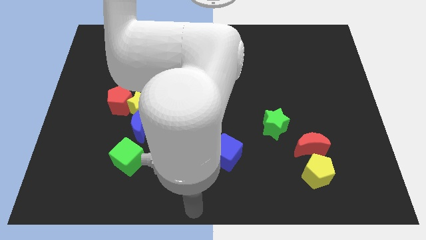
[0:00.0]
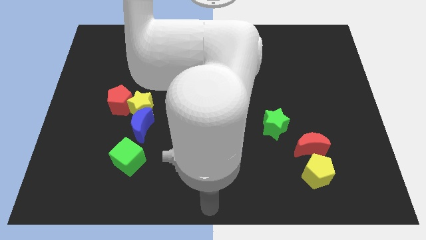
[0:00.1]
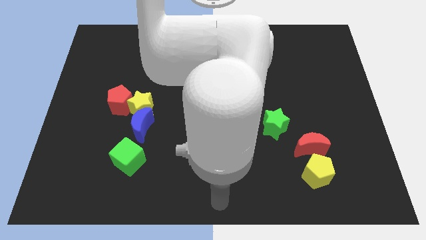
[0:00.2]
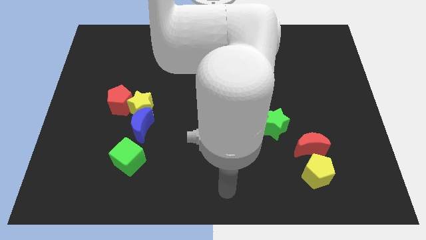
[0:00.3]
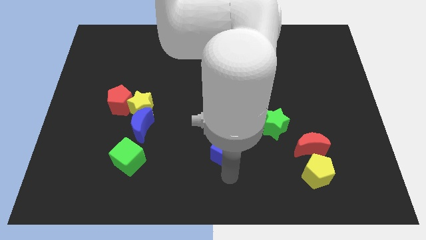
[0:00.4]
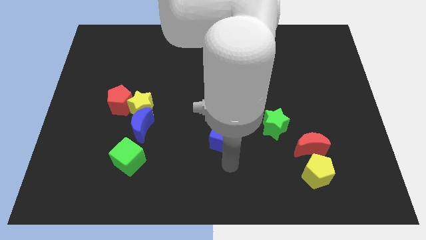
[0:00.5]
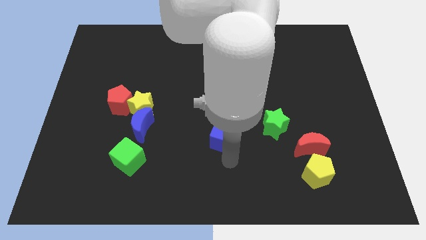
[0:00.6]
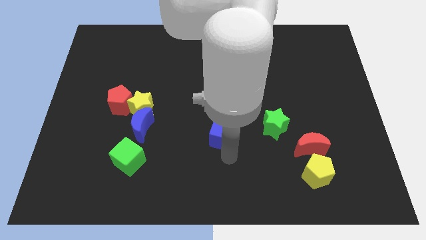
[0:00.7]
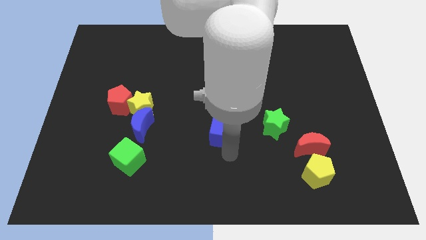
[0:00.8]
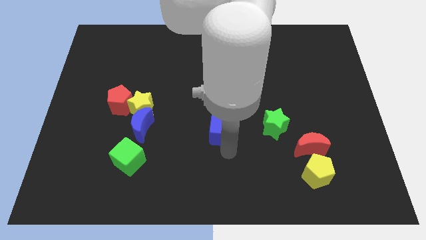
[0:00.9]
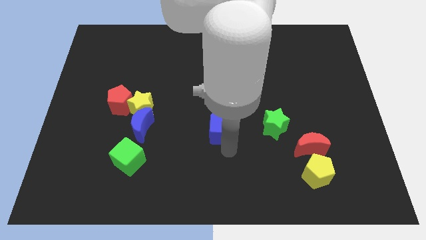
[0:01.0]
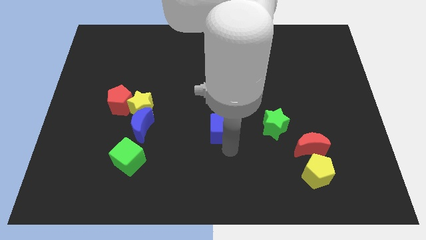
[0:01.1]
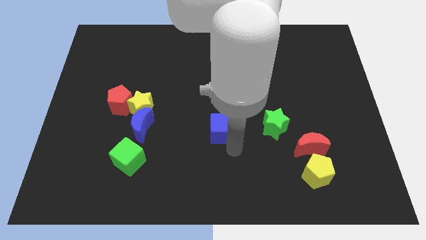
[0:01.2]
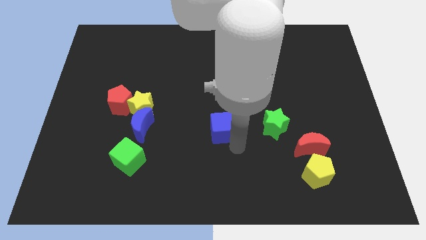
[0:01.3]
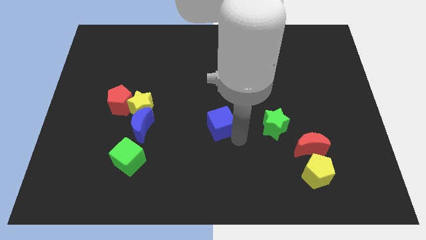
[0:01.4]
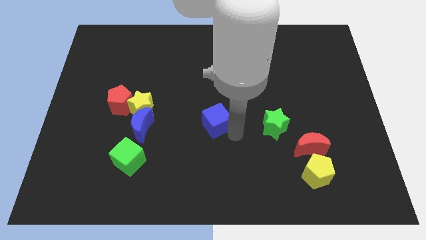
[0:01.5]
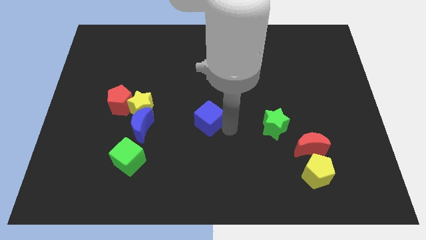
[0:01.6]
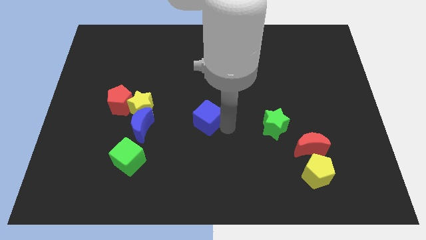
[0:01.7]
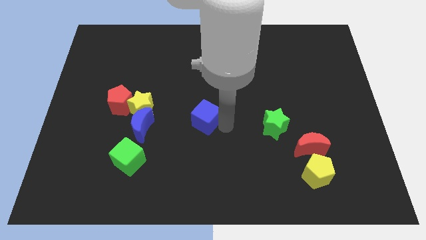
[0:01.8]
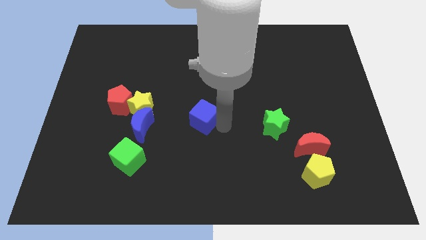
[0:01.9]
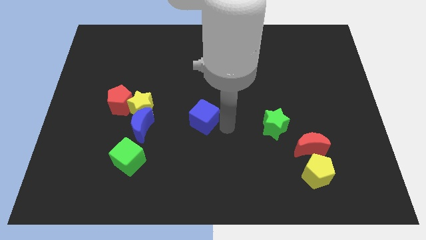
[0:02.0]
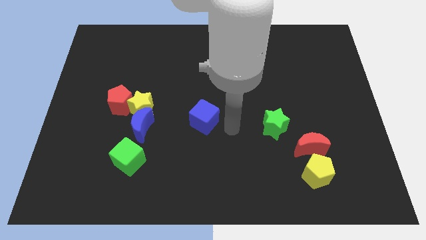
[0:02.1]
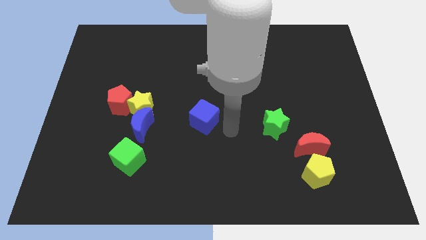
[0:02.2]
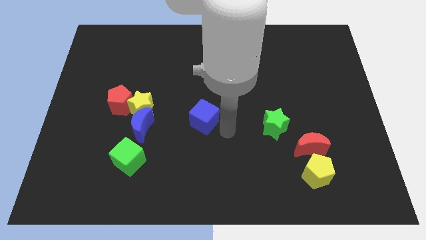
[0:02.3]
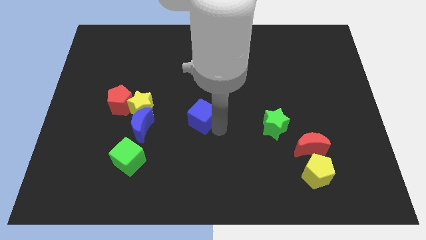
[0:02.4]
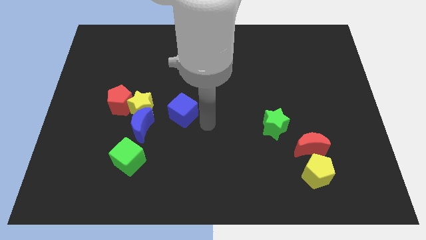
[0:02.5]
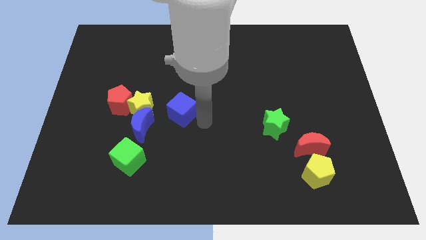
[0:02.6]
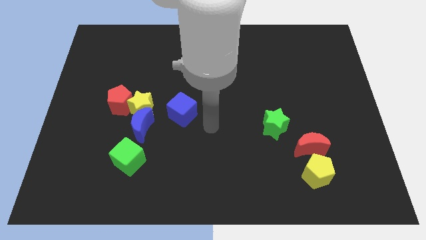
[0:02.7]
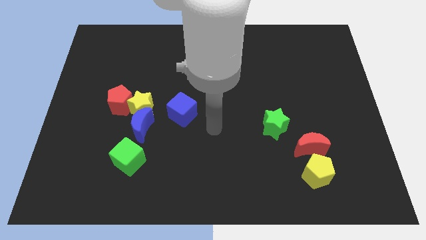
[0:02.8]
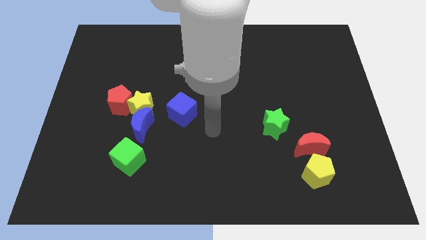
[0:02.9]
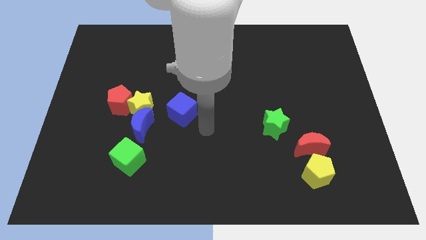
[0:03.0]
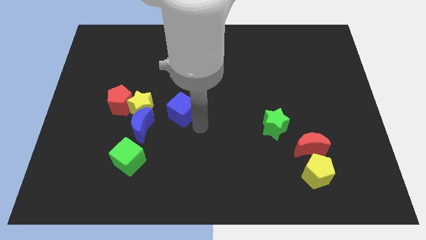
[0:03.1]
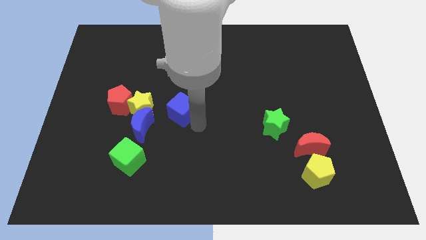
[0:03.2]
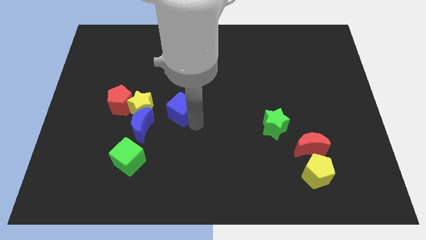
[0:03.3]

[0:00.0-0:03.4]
push blue cube to the right of the yellow star

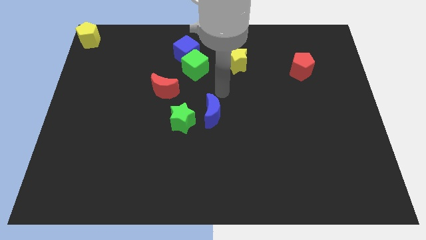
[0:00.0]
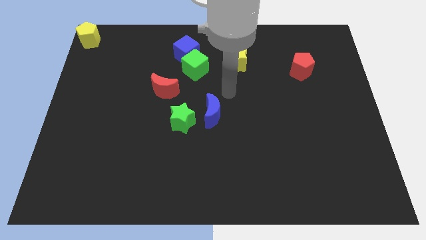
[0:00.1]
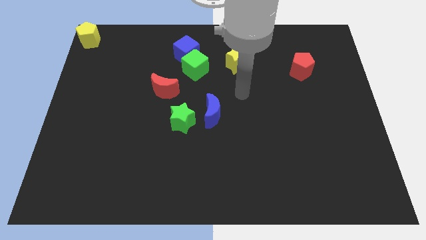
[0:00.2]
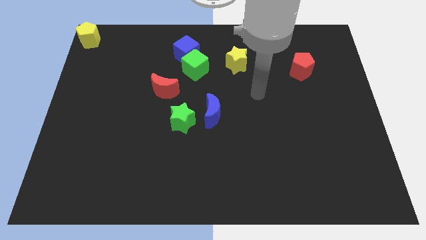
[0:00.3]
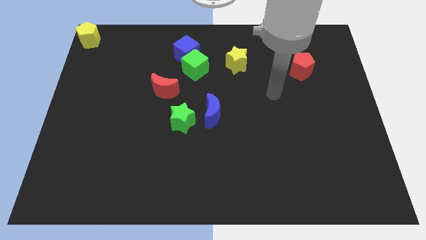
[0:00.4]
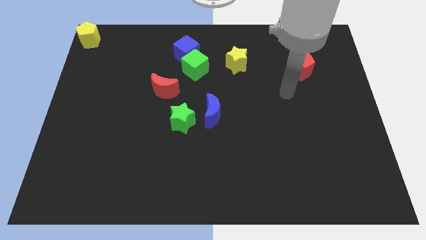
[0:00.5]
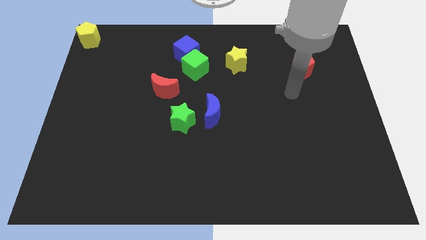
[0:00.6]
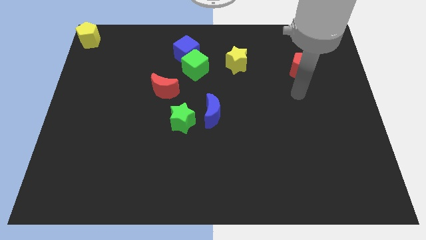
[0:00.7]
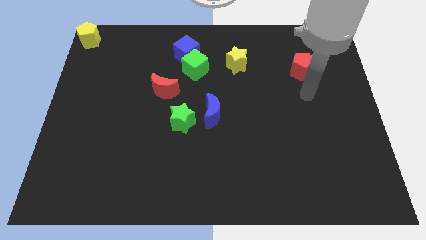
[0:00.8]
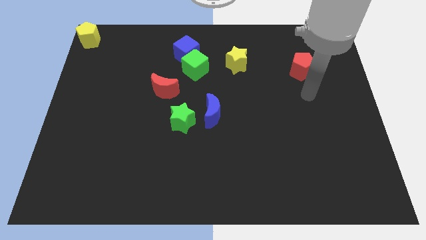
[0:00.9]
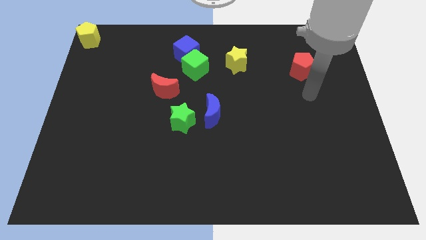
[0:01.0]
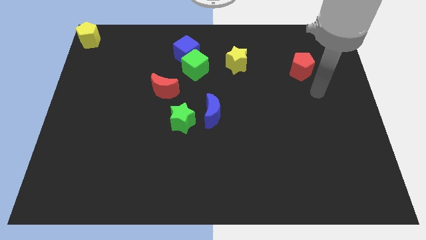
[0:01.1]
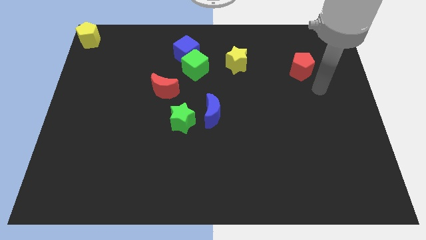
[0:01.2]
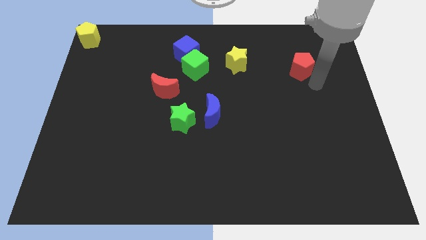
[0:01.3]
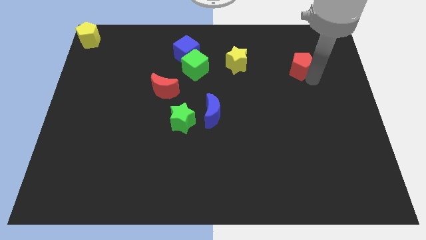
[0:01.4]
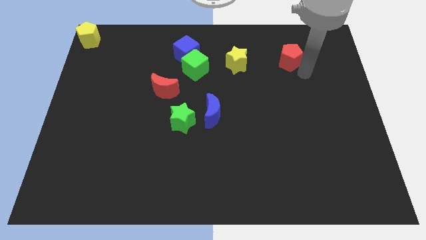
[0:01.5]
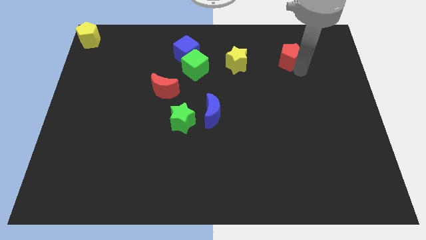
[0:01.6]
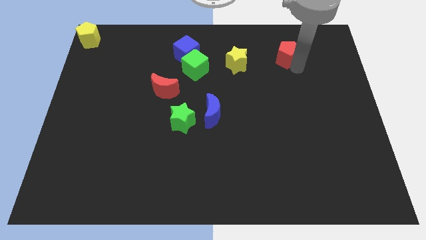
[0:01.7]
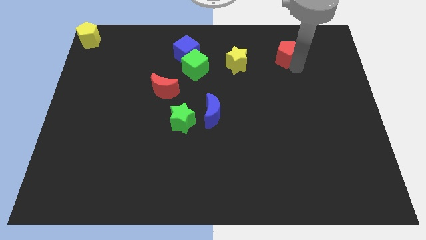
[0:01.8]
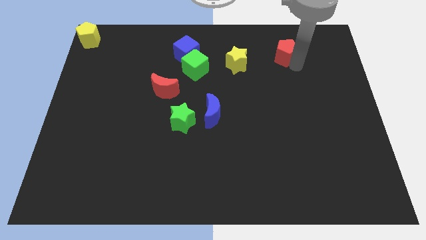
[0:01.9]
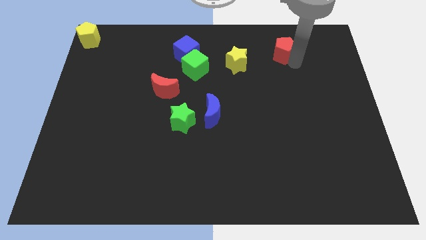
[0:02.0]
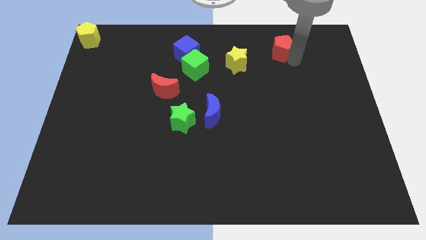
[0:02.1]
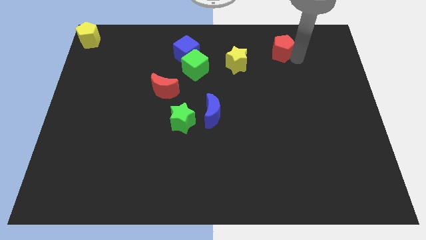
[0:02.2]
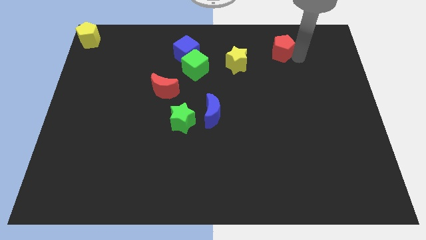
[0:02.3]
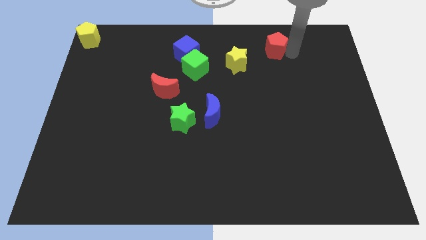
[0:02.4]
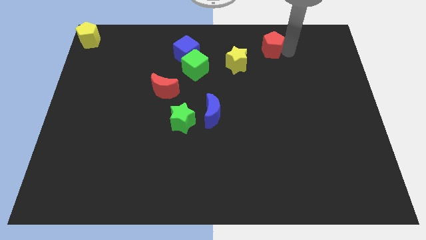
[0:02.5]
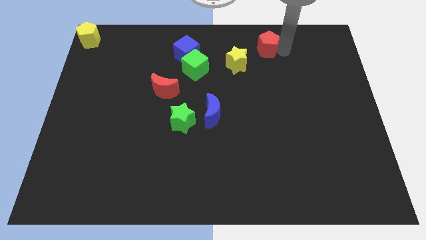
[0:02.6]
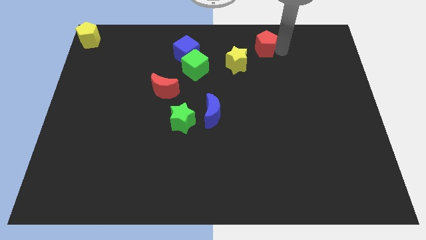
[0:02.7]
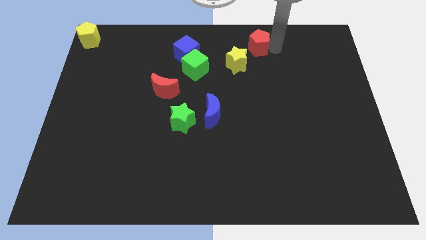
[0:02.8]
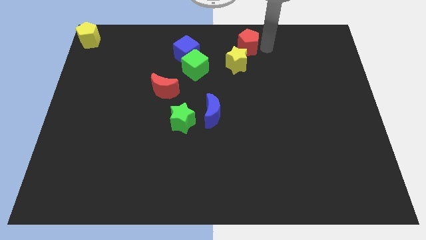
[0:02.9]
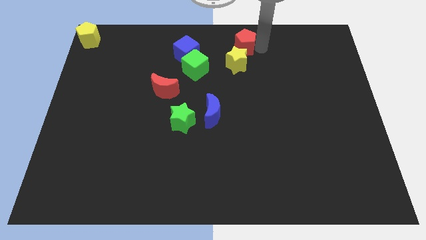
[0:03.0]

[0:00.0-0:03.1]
slide red pentagon to top right of yellow star

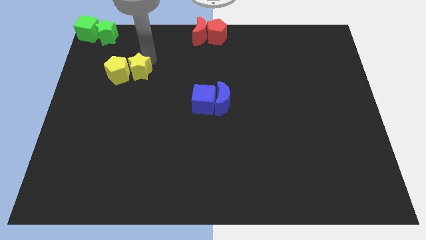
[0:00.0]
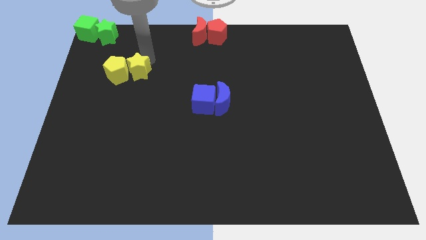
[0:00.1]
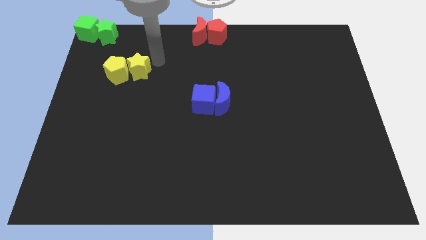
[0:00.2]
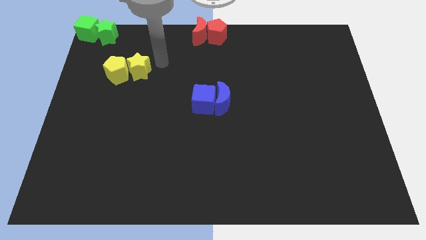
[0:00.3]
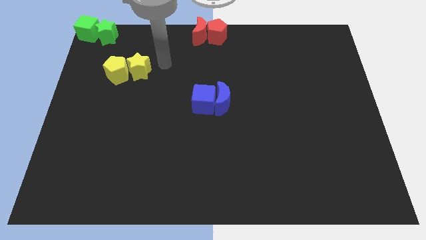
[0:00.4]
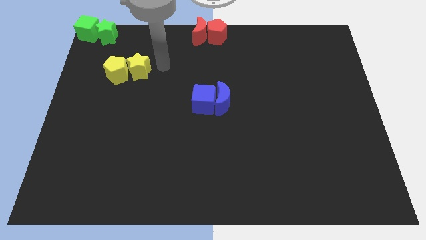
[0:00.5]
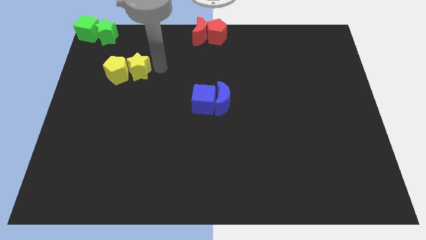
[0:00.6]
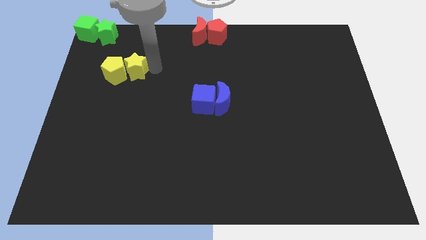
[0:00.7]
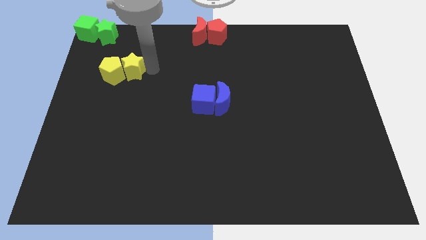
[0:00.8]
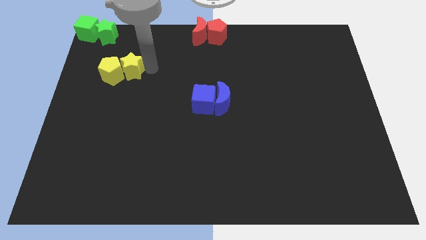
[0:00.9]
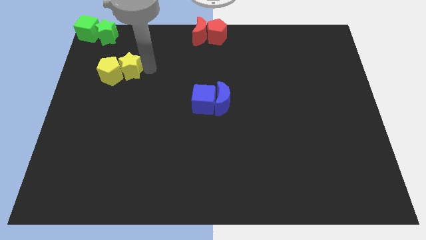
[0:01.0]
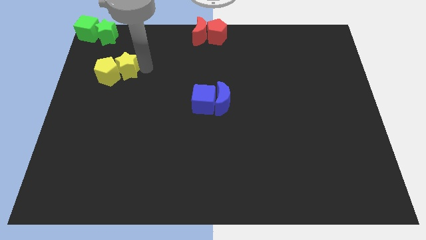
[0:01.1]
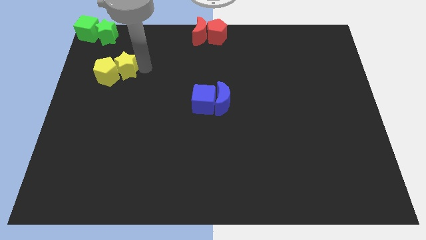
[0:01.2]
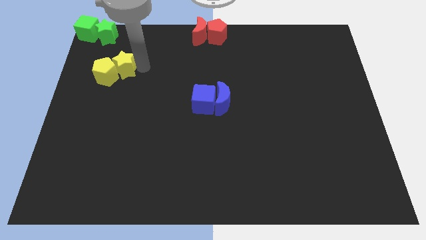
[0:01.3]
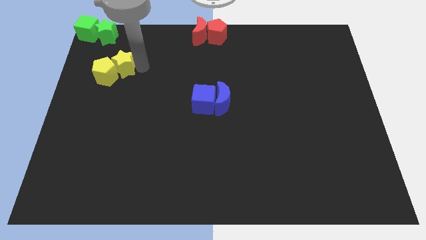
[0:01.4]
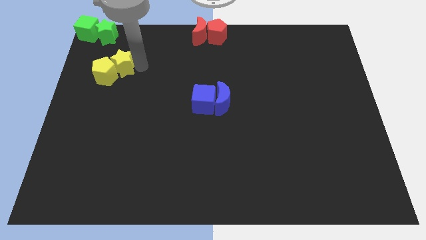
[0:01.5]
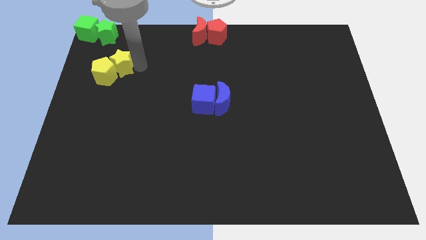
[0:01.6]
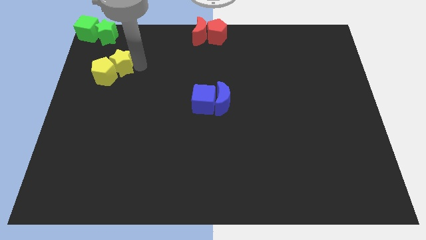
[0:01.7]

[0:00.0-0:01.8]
slightly push the yellow blocks to the left side of the board

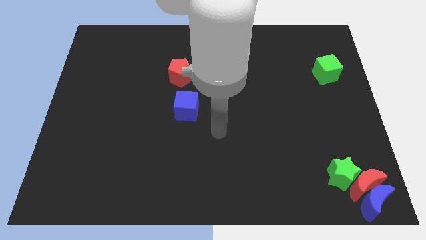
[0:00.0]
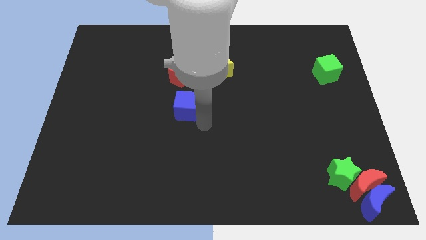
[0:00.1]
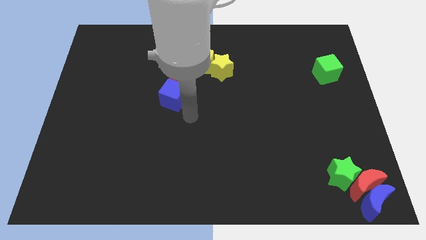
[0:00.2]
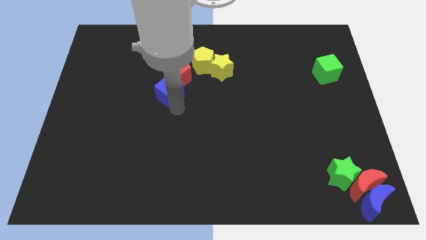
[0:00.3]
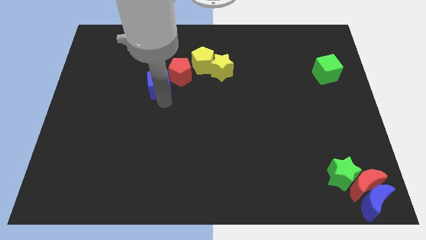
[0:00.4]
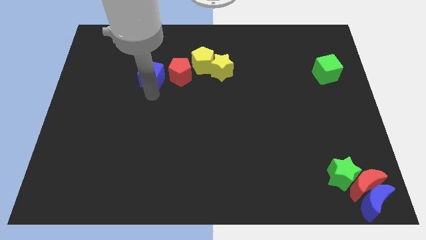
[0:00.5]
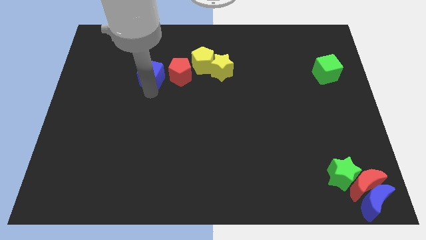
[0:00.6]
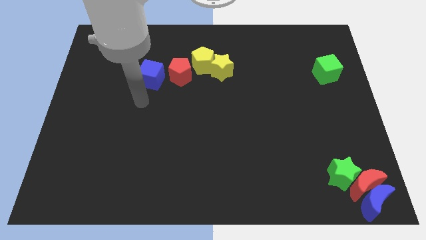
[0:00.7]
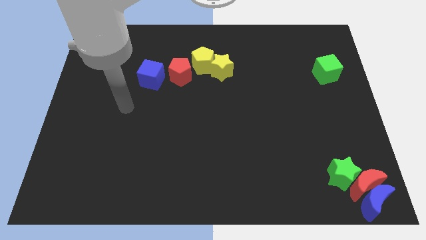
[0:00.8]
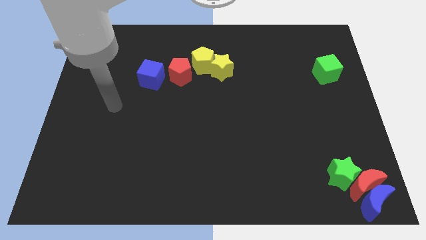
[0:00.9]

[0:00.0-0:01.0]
place the blue cube to the left of the red pentagon
